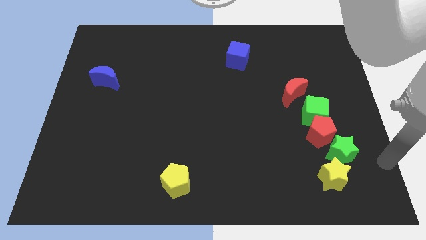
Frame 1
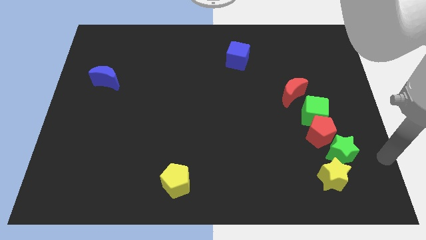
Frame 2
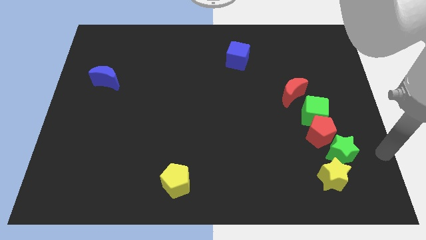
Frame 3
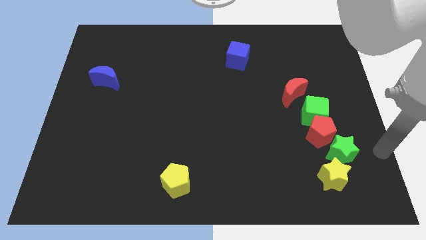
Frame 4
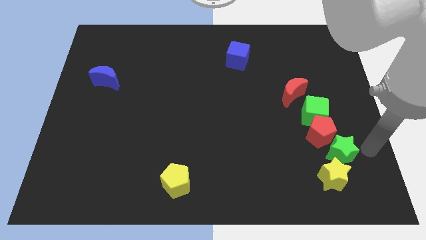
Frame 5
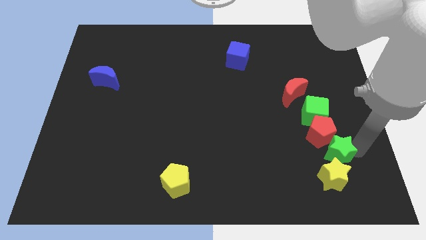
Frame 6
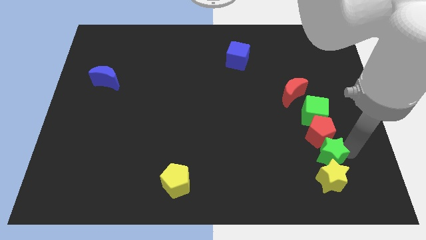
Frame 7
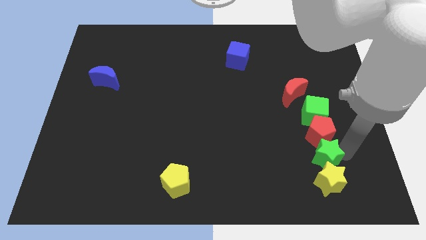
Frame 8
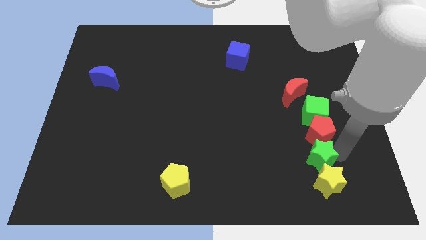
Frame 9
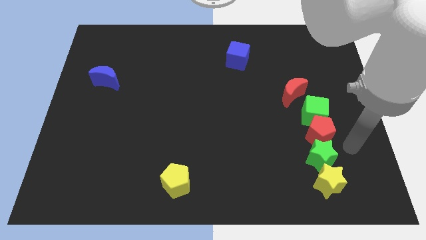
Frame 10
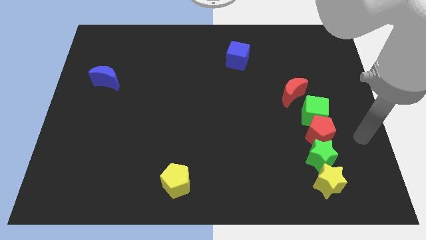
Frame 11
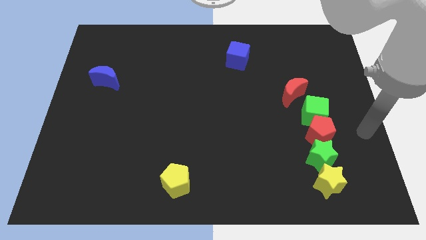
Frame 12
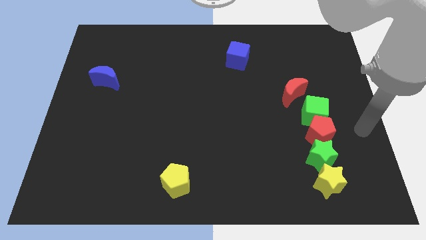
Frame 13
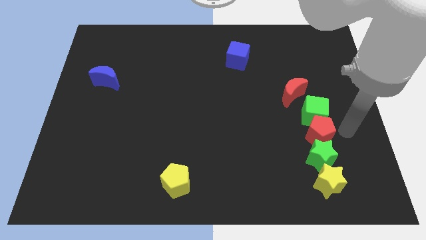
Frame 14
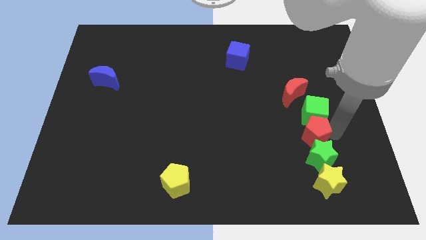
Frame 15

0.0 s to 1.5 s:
place green star down to the red pentagon

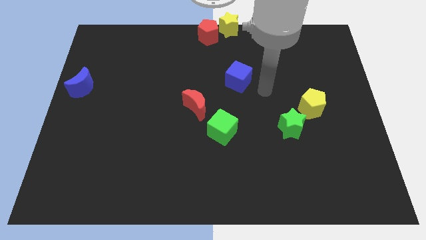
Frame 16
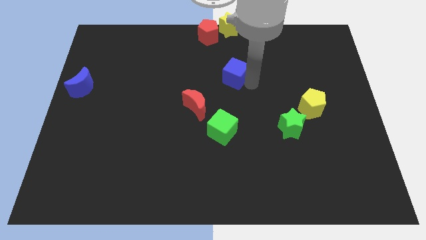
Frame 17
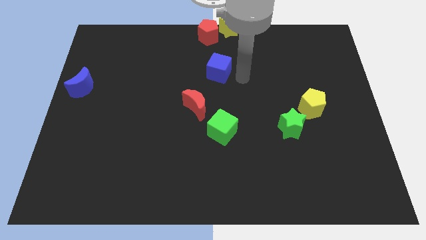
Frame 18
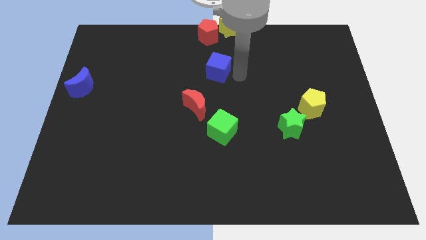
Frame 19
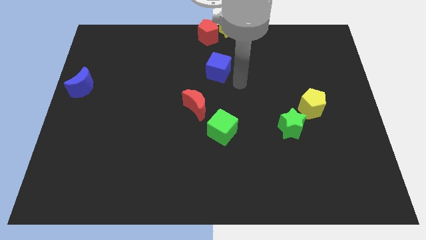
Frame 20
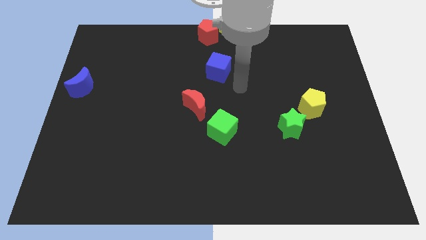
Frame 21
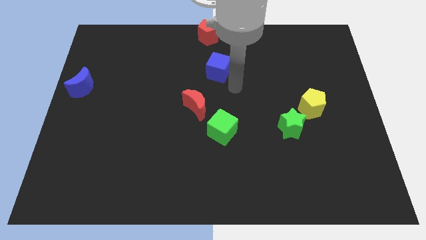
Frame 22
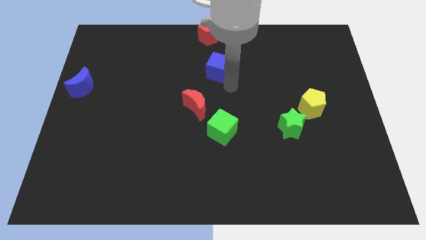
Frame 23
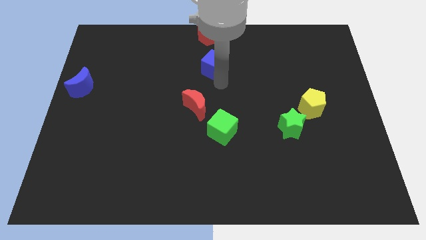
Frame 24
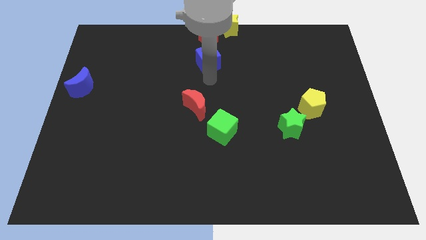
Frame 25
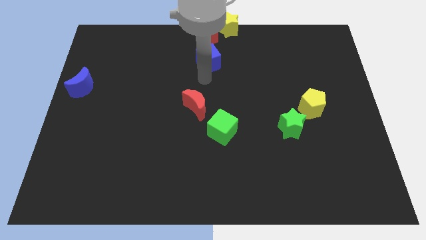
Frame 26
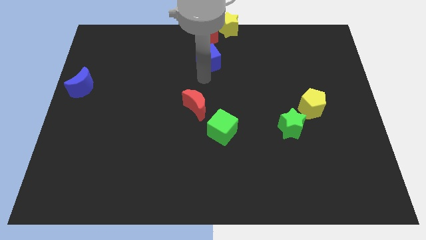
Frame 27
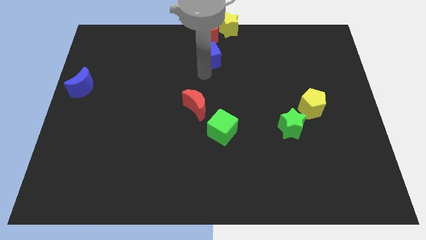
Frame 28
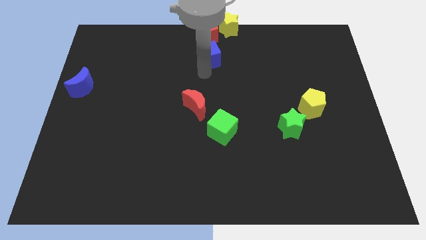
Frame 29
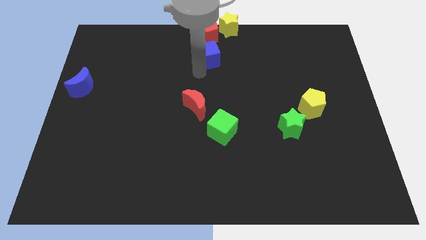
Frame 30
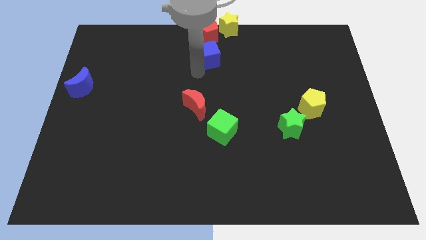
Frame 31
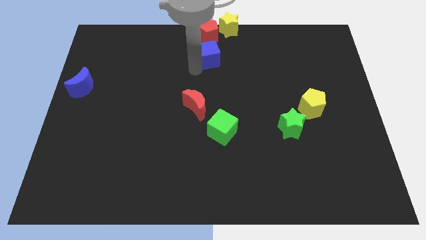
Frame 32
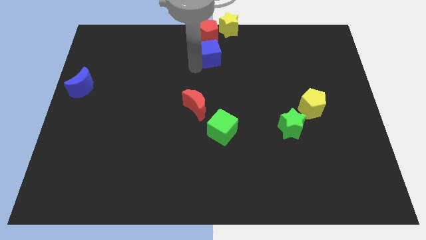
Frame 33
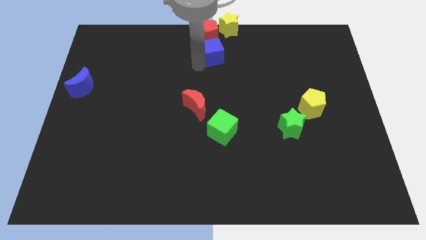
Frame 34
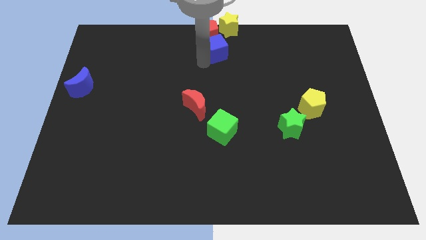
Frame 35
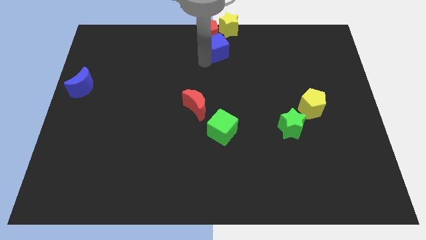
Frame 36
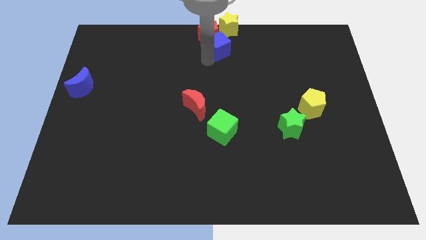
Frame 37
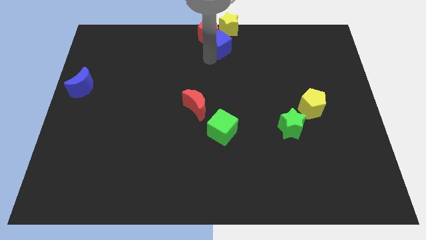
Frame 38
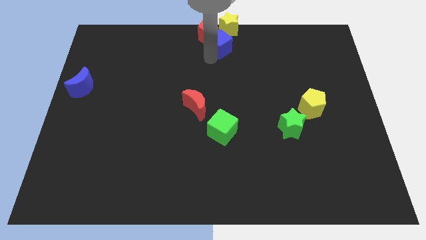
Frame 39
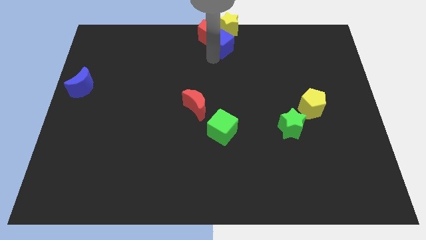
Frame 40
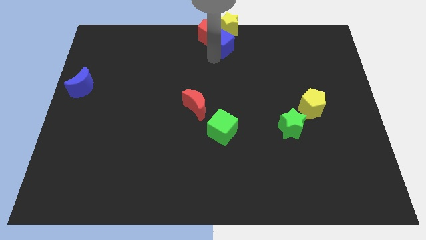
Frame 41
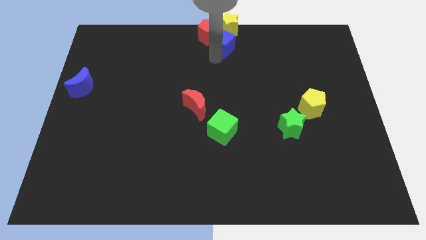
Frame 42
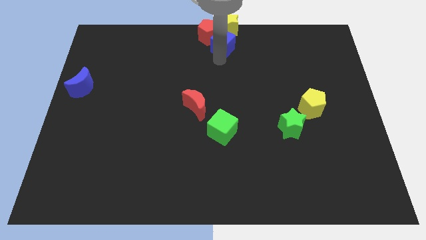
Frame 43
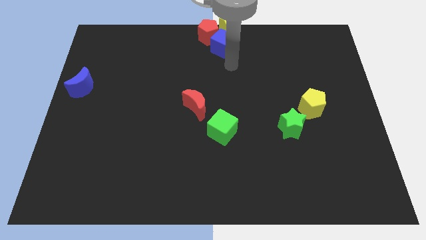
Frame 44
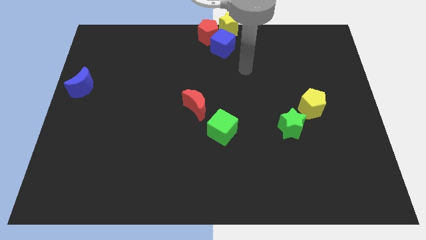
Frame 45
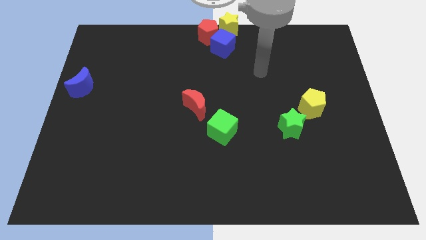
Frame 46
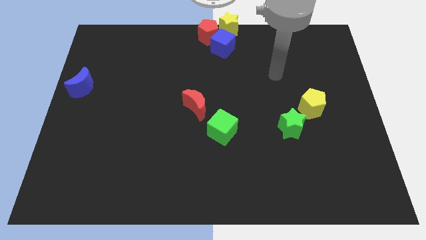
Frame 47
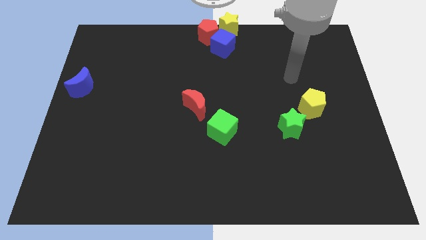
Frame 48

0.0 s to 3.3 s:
push the blue cube into the group of blocks

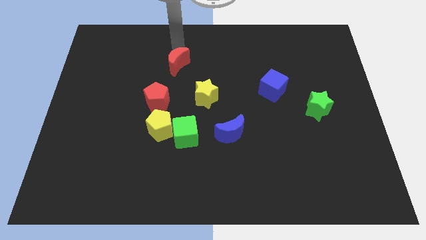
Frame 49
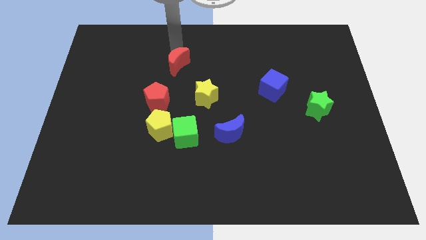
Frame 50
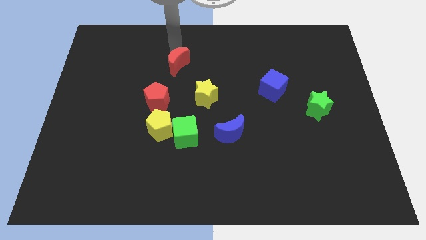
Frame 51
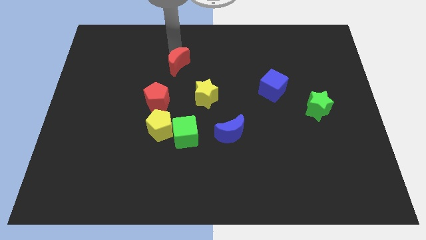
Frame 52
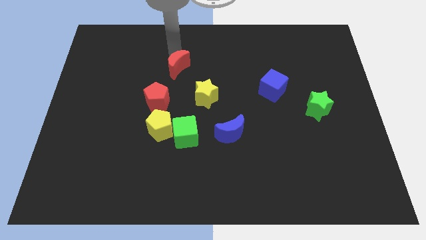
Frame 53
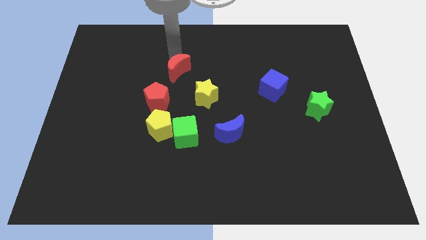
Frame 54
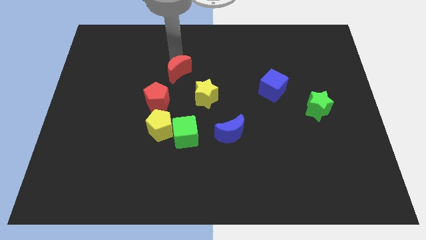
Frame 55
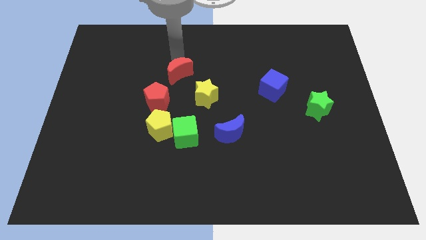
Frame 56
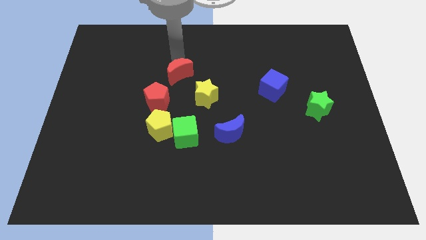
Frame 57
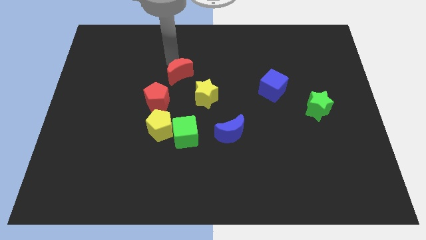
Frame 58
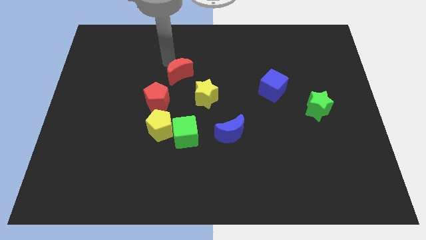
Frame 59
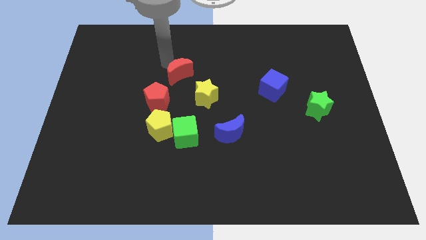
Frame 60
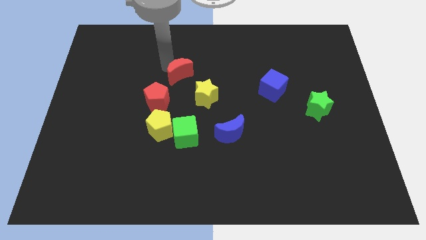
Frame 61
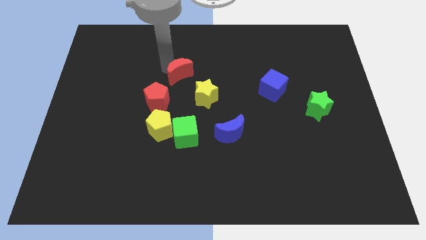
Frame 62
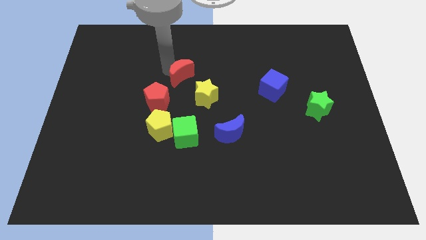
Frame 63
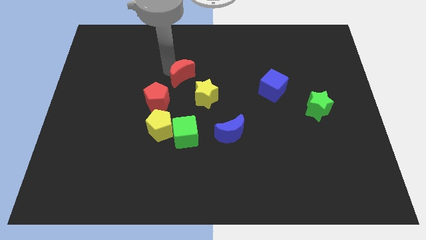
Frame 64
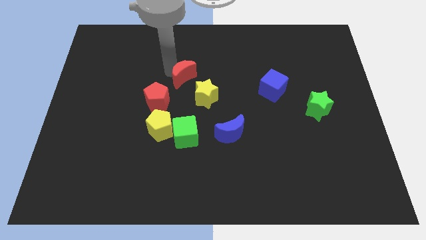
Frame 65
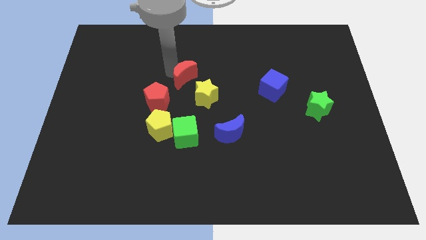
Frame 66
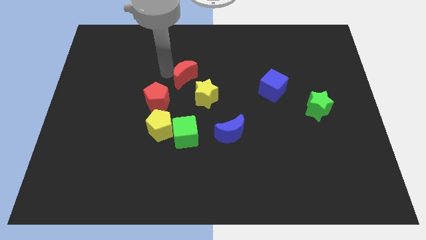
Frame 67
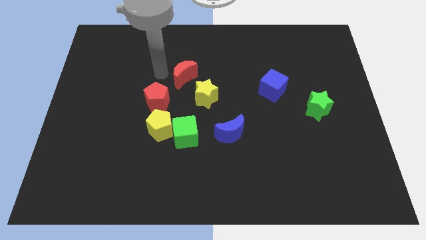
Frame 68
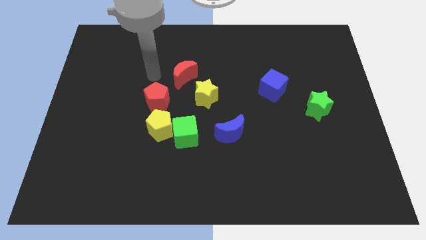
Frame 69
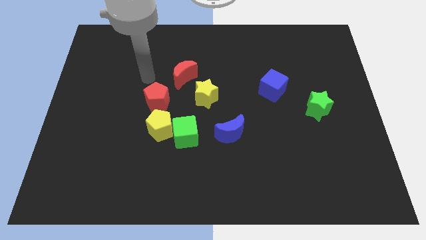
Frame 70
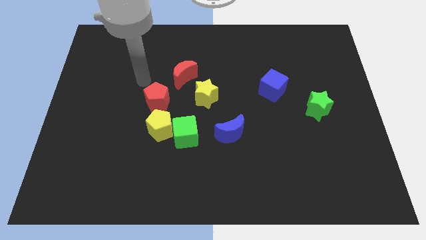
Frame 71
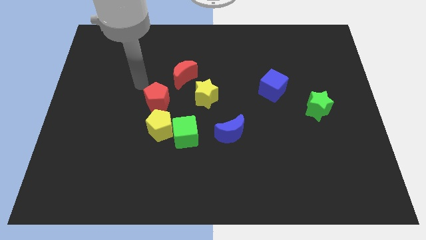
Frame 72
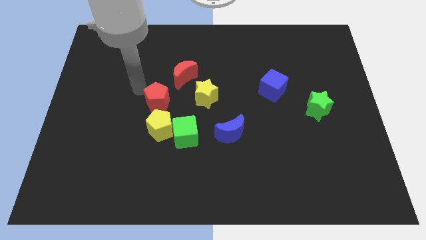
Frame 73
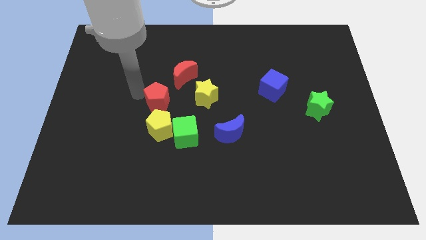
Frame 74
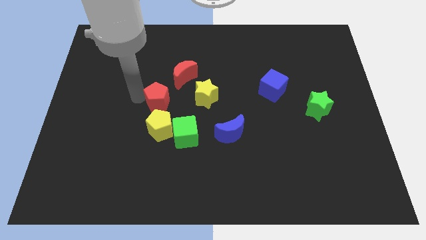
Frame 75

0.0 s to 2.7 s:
push red crescent to the diagonal top left of the yellow star

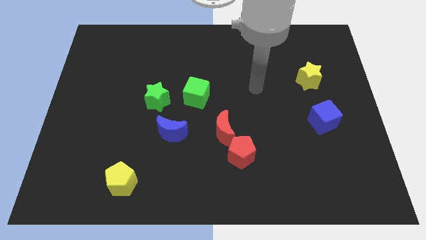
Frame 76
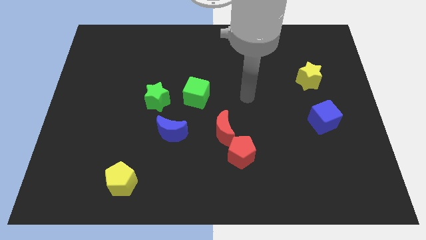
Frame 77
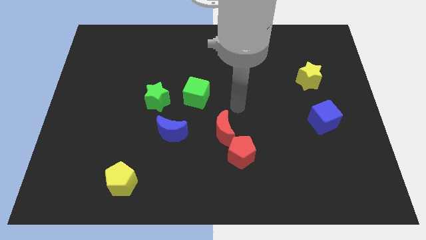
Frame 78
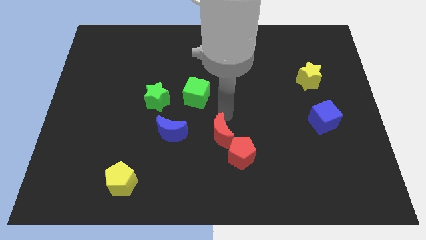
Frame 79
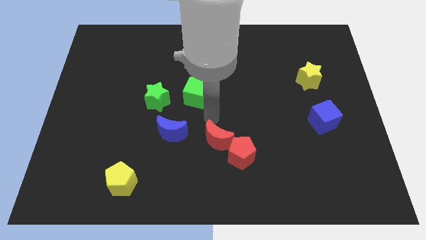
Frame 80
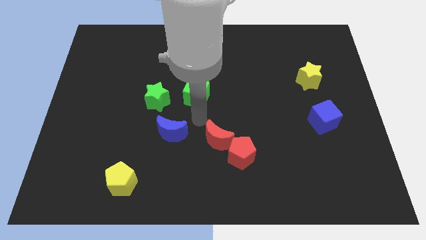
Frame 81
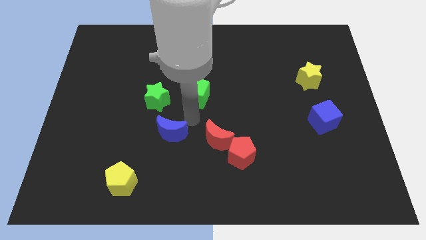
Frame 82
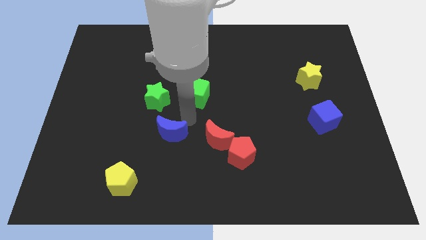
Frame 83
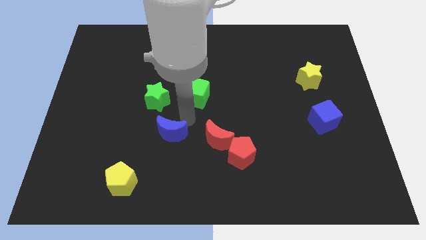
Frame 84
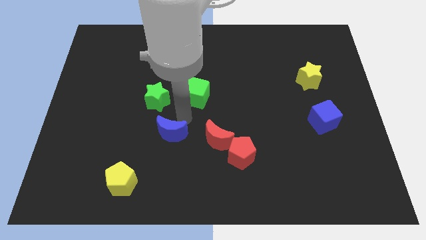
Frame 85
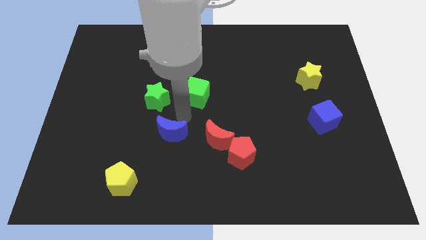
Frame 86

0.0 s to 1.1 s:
move your arm below the green cube

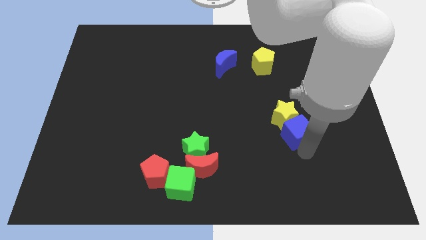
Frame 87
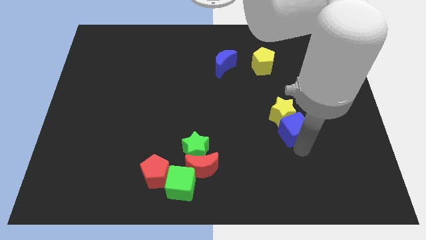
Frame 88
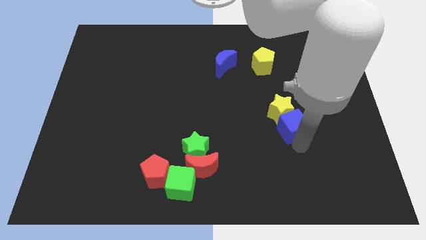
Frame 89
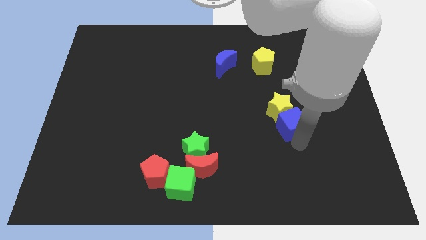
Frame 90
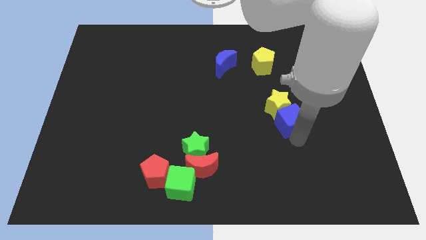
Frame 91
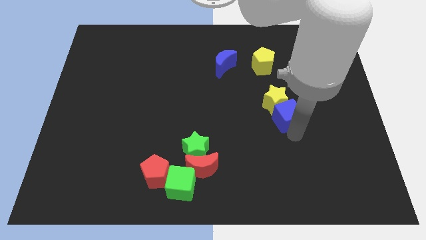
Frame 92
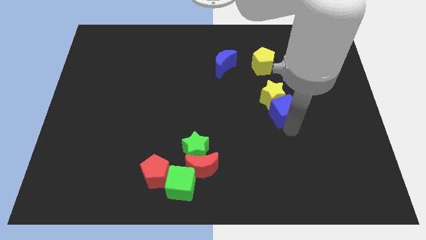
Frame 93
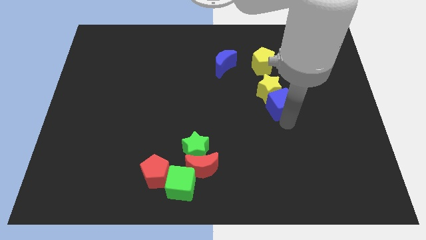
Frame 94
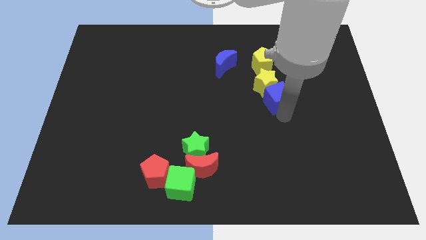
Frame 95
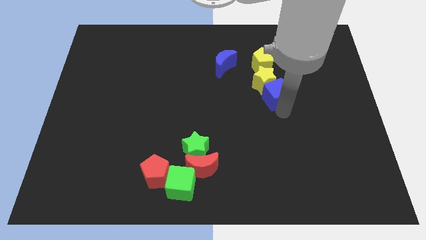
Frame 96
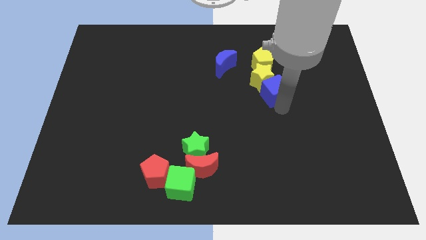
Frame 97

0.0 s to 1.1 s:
place the yellow star at the bottom of the yellow pentagon along with the blue cube
